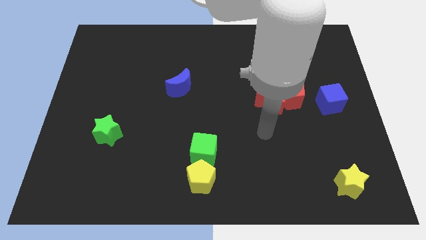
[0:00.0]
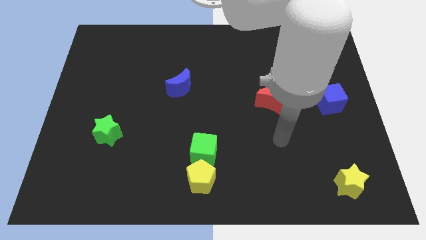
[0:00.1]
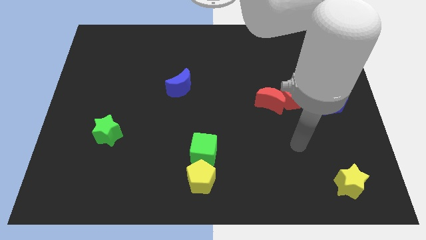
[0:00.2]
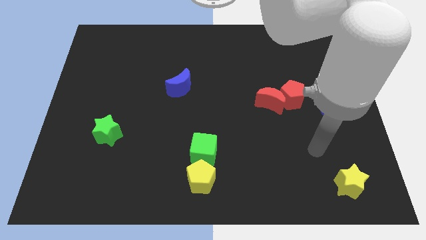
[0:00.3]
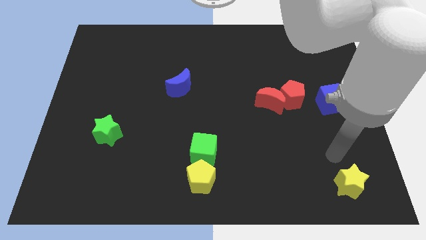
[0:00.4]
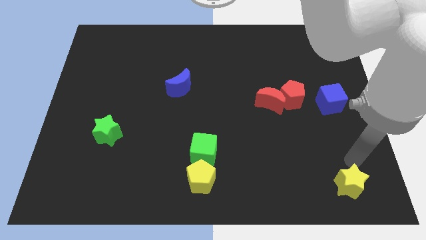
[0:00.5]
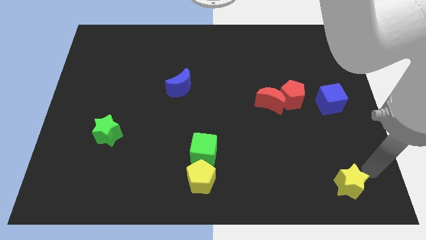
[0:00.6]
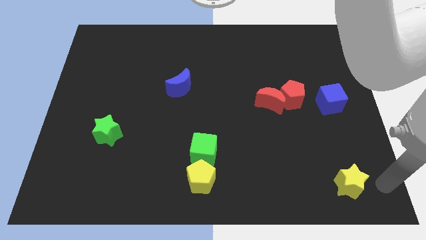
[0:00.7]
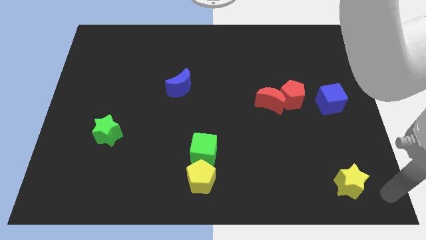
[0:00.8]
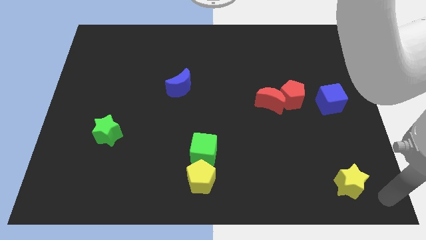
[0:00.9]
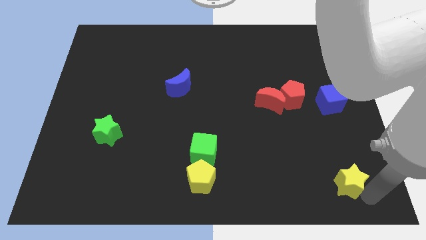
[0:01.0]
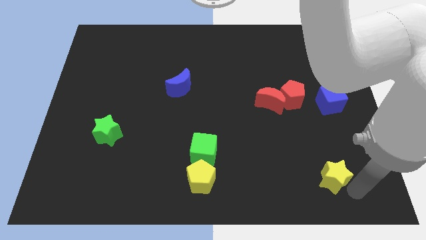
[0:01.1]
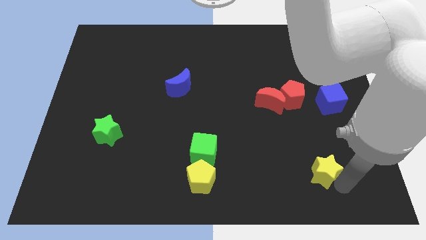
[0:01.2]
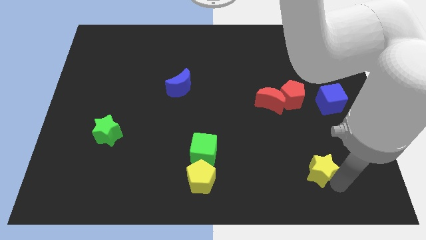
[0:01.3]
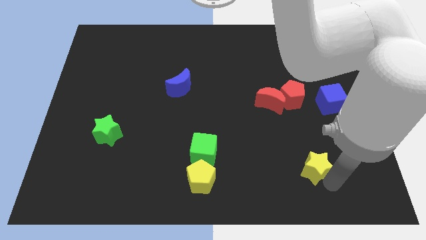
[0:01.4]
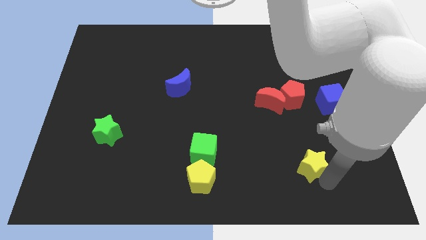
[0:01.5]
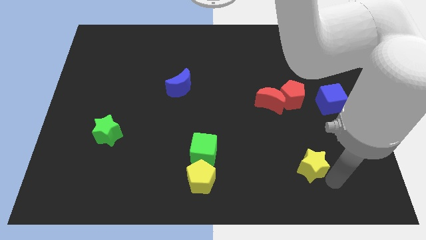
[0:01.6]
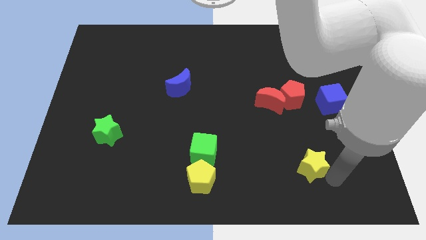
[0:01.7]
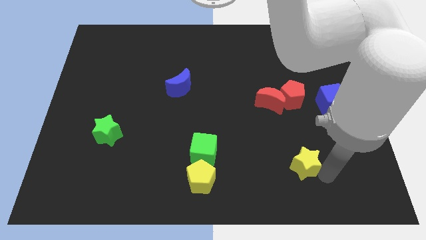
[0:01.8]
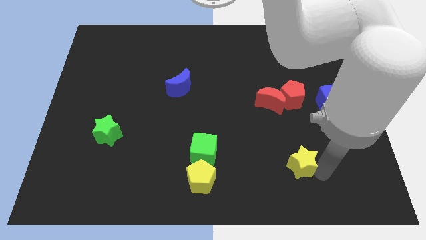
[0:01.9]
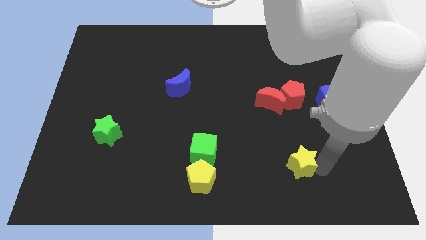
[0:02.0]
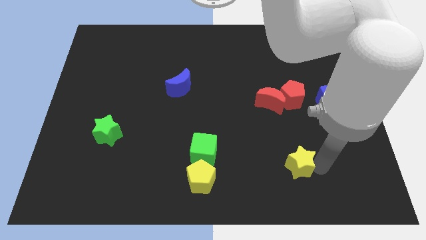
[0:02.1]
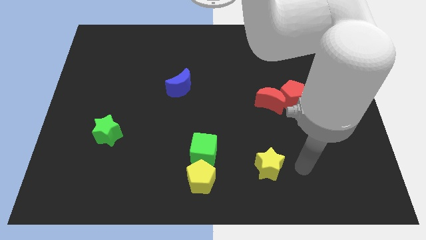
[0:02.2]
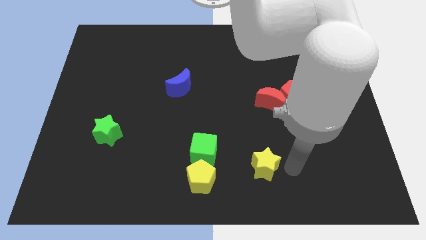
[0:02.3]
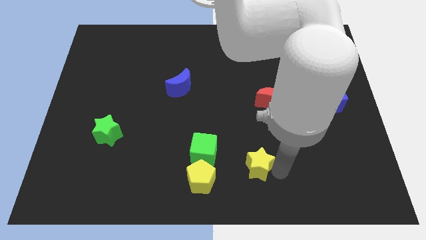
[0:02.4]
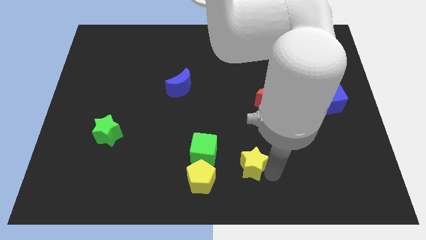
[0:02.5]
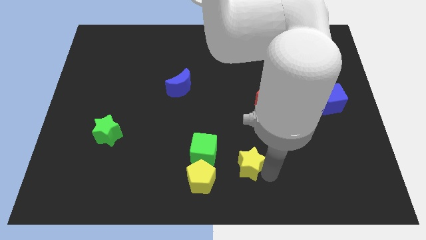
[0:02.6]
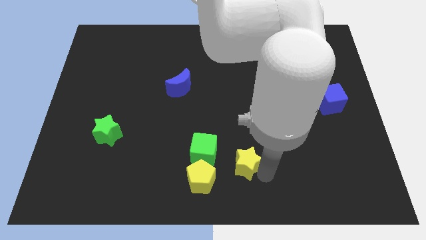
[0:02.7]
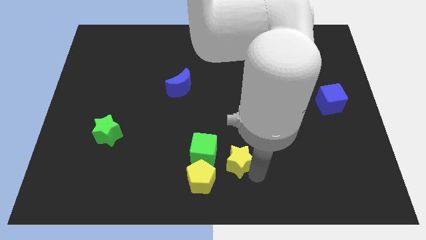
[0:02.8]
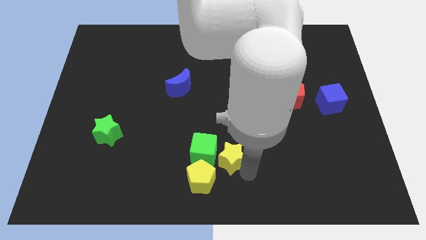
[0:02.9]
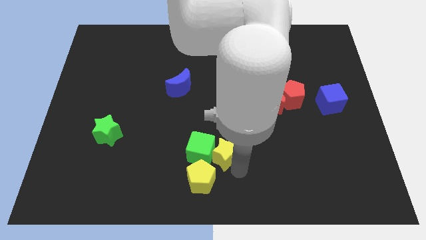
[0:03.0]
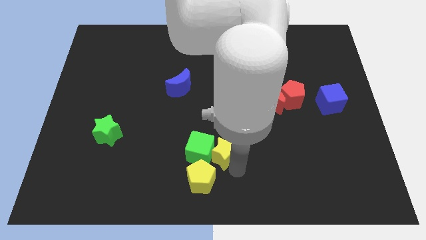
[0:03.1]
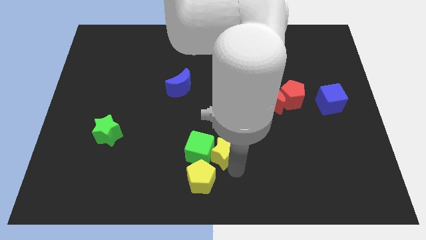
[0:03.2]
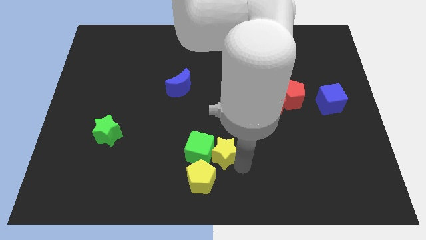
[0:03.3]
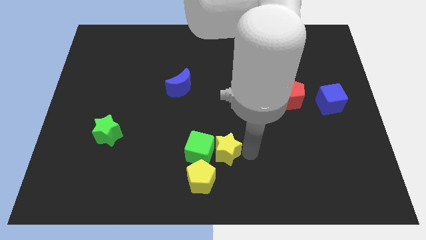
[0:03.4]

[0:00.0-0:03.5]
push the yellow star into the green cube

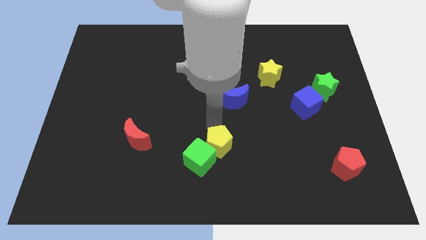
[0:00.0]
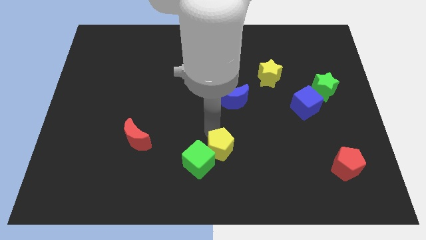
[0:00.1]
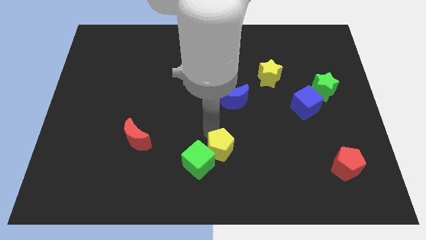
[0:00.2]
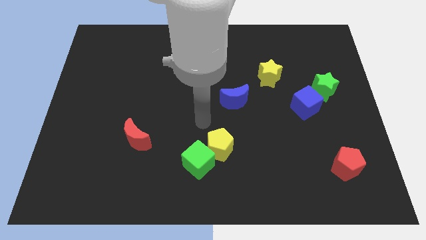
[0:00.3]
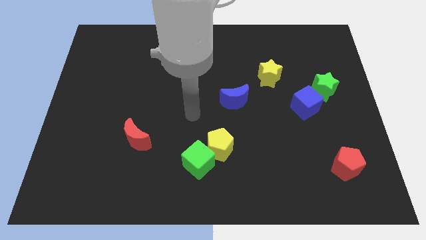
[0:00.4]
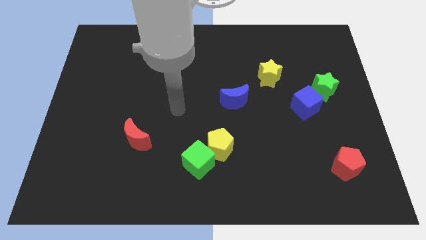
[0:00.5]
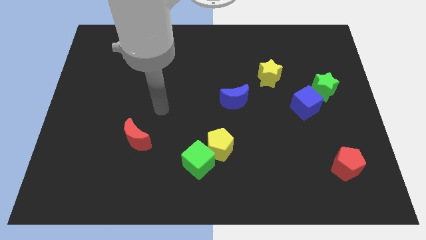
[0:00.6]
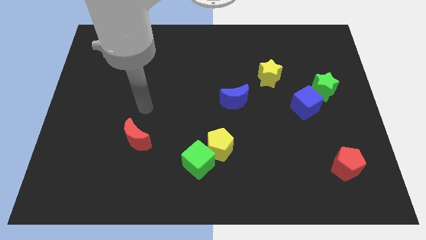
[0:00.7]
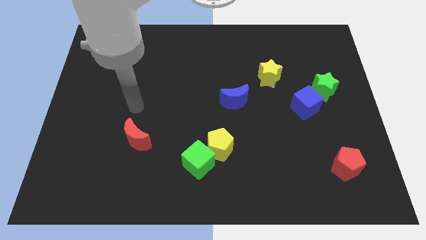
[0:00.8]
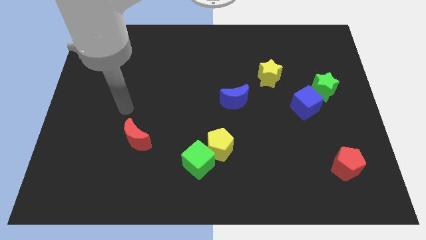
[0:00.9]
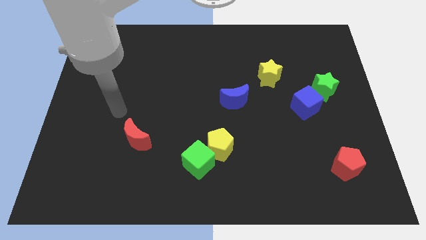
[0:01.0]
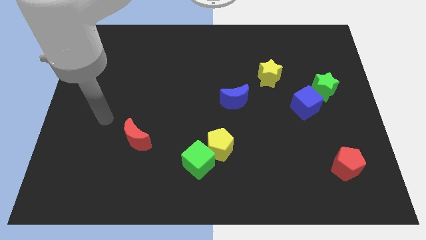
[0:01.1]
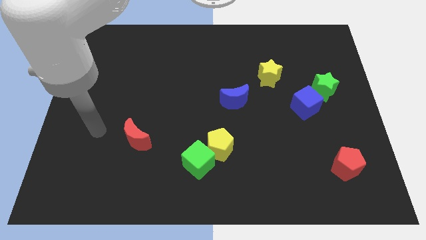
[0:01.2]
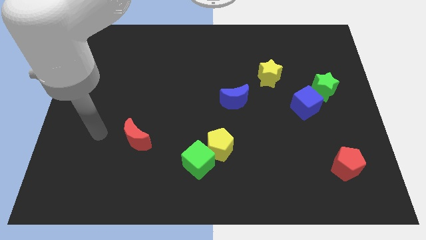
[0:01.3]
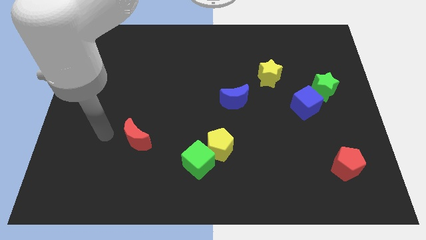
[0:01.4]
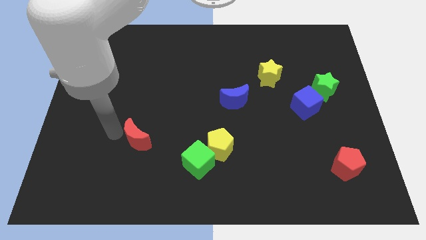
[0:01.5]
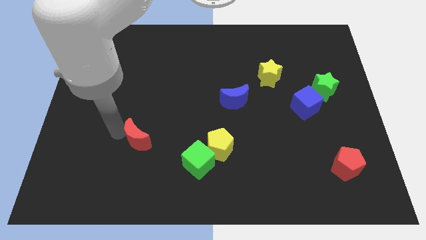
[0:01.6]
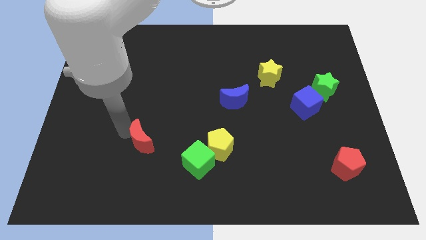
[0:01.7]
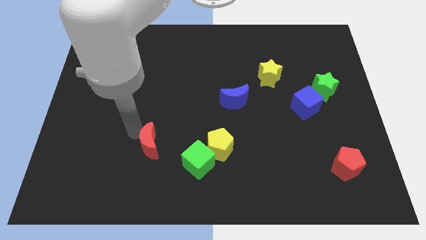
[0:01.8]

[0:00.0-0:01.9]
move your arm to the left of red moon

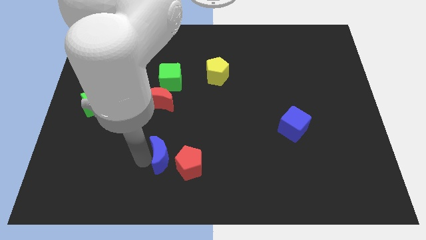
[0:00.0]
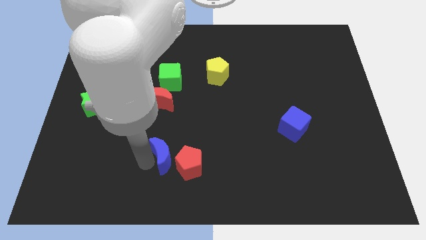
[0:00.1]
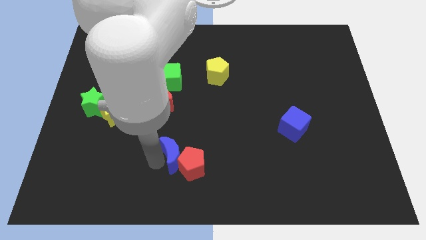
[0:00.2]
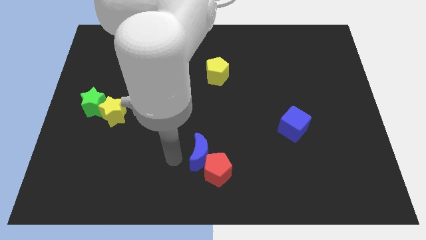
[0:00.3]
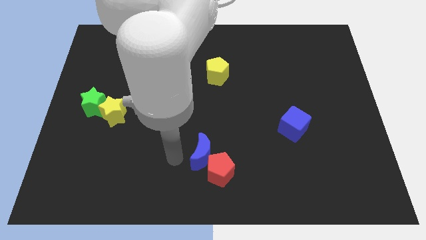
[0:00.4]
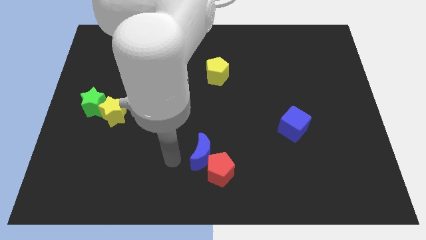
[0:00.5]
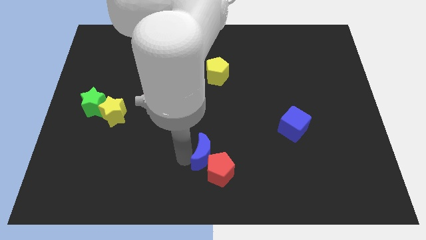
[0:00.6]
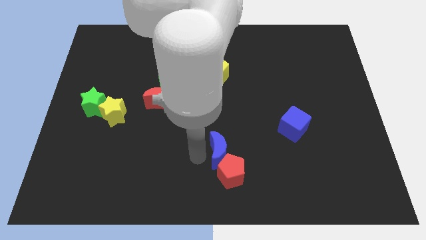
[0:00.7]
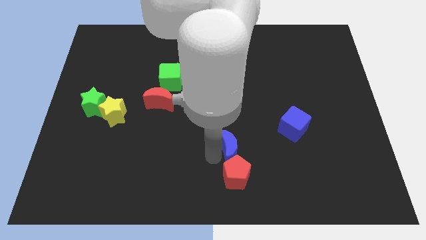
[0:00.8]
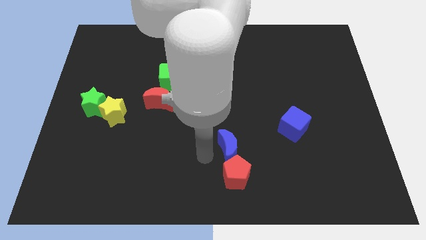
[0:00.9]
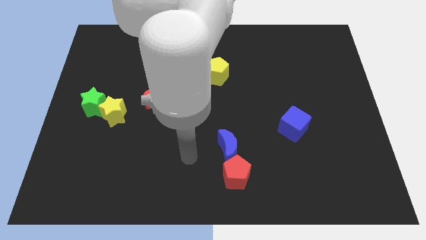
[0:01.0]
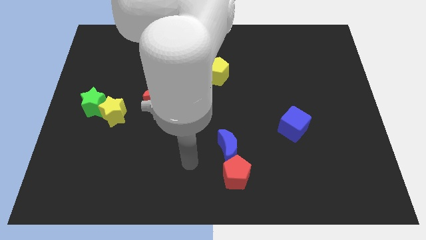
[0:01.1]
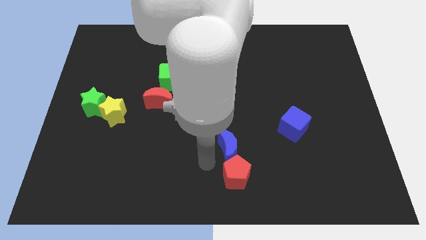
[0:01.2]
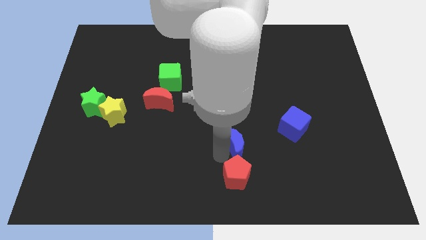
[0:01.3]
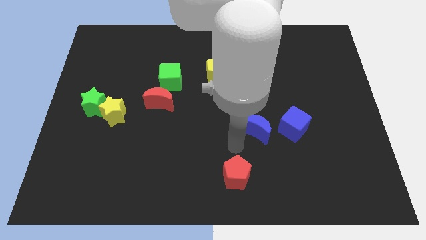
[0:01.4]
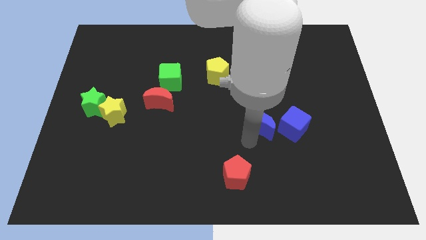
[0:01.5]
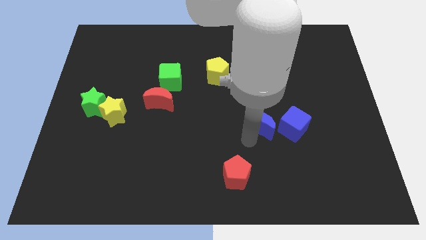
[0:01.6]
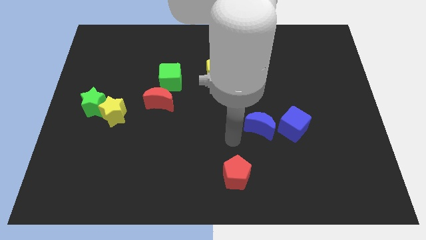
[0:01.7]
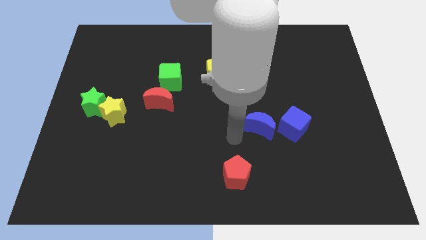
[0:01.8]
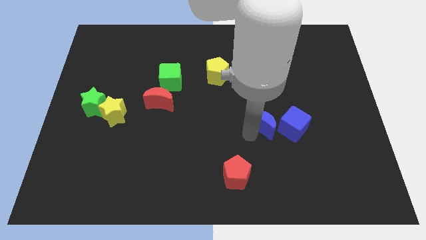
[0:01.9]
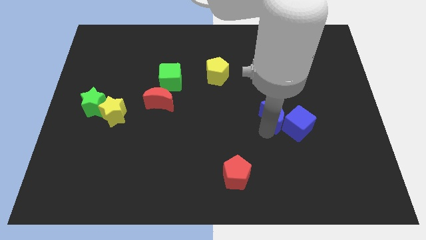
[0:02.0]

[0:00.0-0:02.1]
move the blue crescent left beside the blue cube

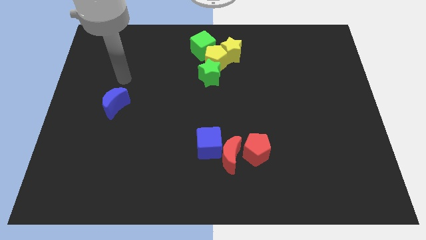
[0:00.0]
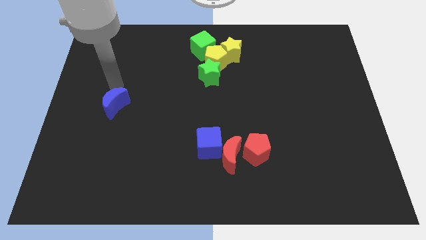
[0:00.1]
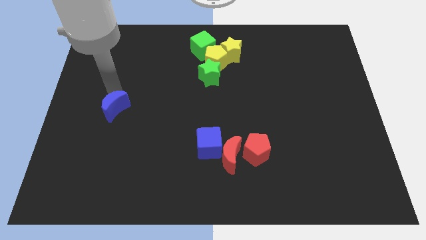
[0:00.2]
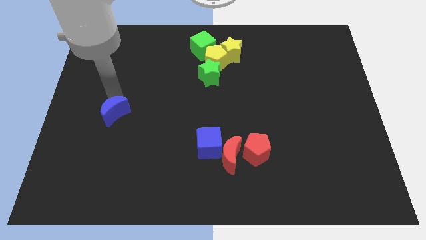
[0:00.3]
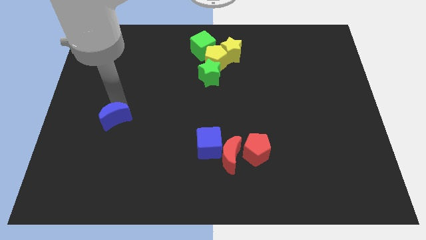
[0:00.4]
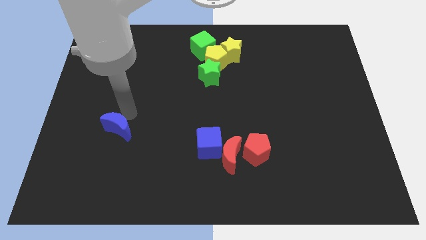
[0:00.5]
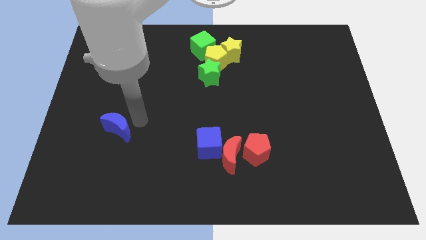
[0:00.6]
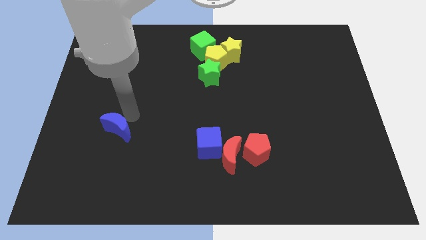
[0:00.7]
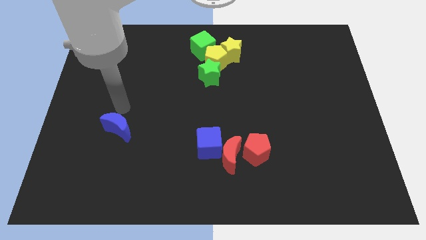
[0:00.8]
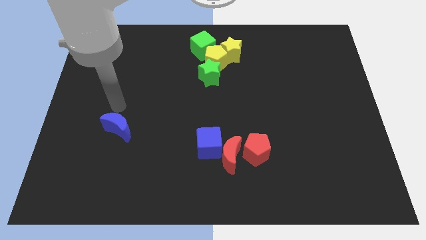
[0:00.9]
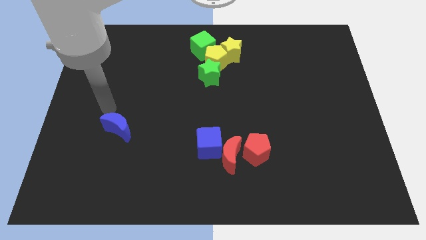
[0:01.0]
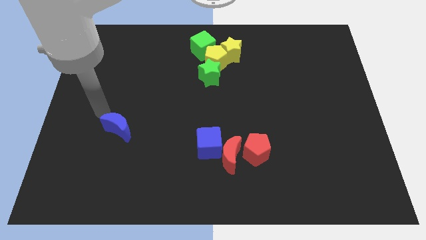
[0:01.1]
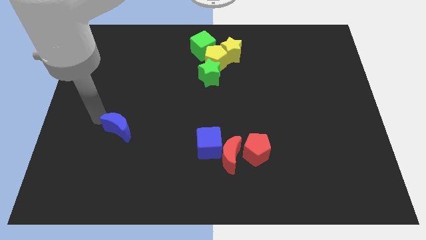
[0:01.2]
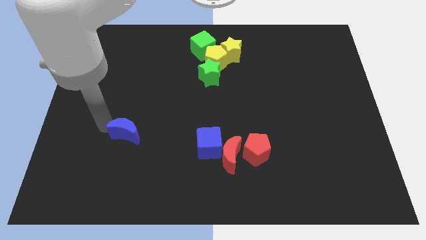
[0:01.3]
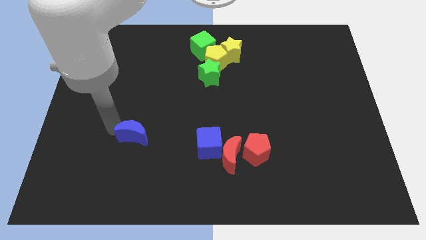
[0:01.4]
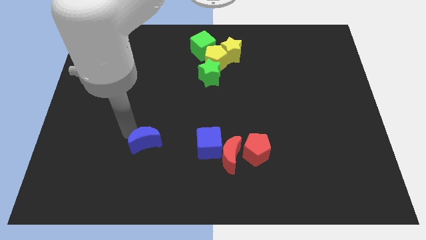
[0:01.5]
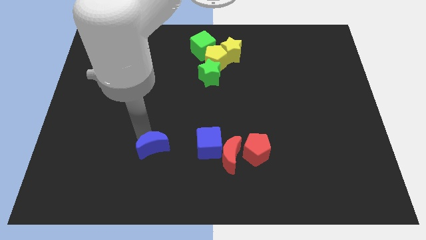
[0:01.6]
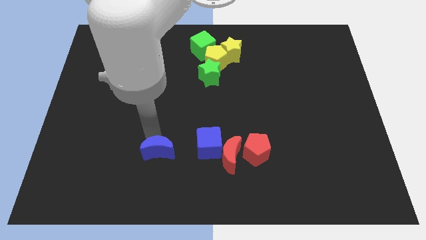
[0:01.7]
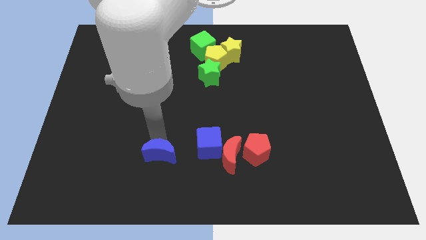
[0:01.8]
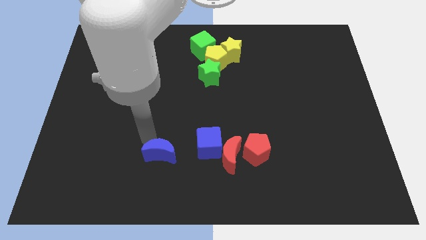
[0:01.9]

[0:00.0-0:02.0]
move the blue moon to the left of blue cube
